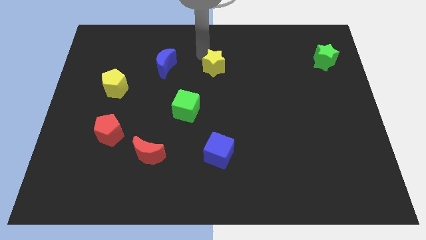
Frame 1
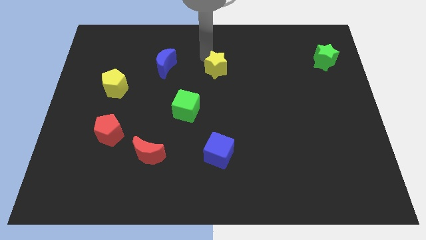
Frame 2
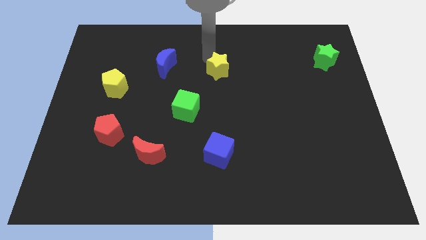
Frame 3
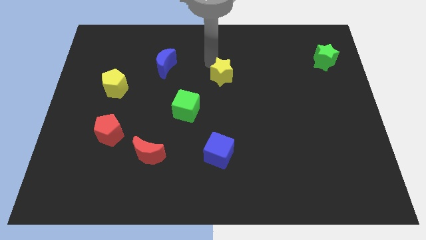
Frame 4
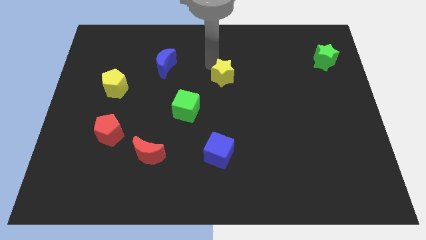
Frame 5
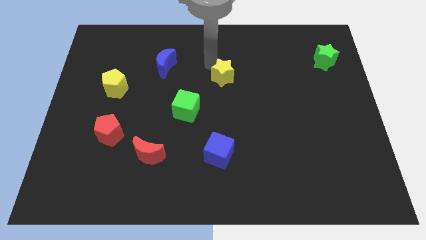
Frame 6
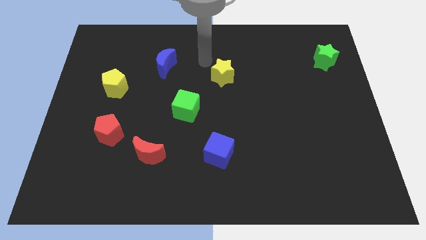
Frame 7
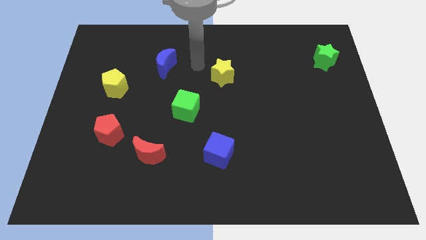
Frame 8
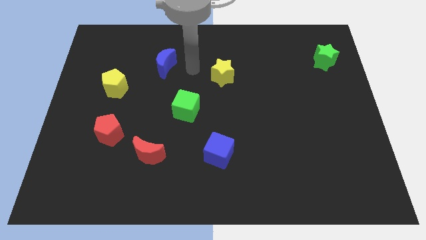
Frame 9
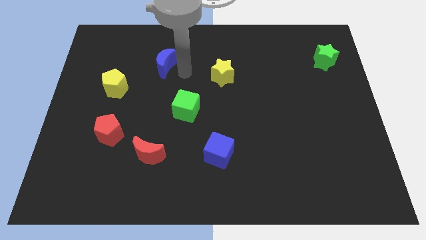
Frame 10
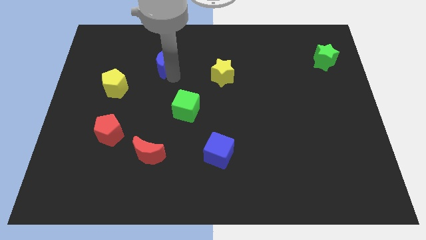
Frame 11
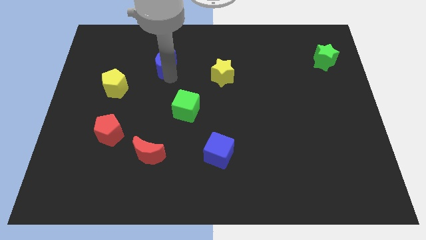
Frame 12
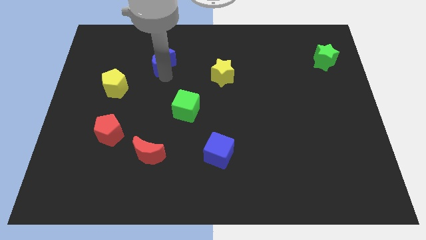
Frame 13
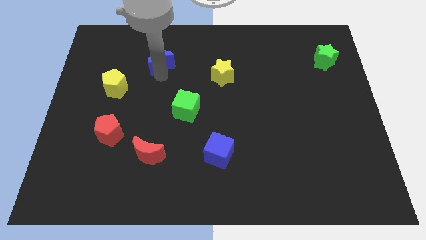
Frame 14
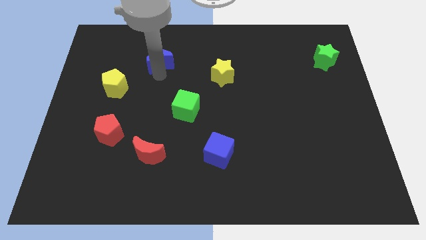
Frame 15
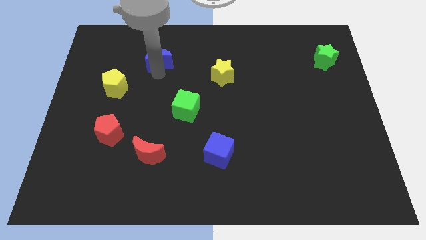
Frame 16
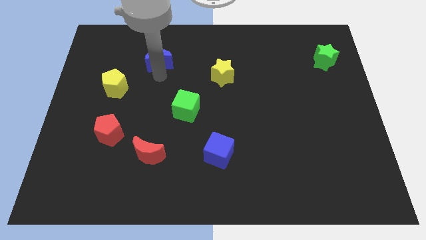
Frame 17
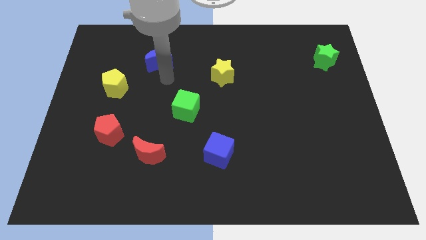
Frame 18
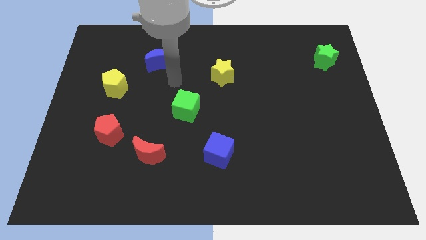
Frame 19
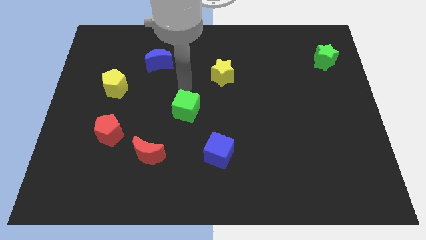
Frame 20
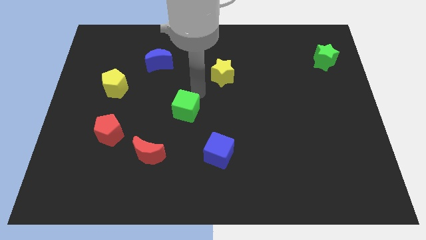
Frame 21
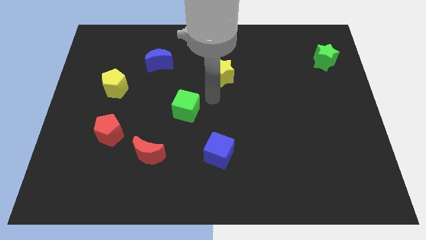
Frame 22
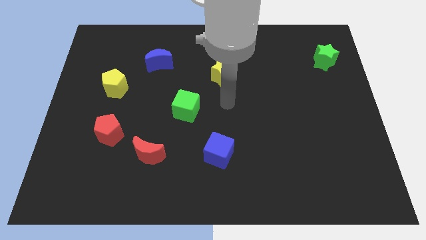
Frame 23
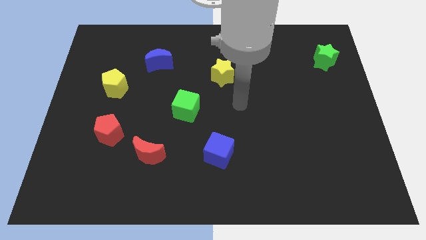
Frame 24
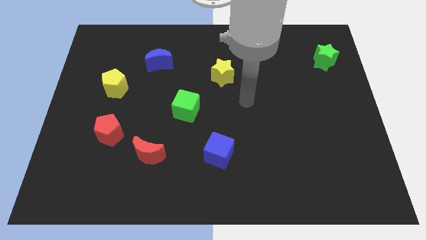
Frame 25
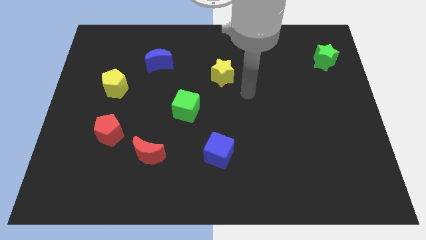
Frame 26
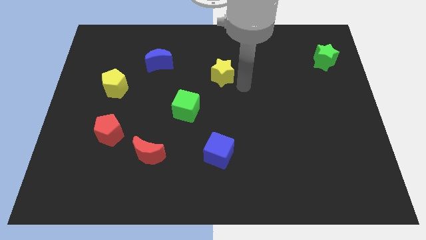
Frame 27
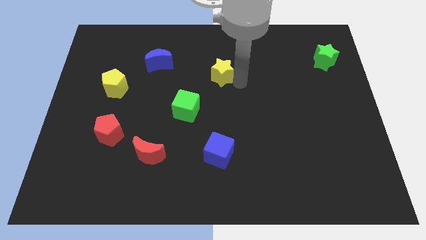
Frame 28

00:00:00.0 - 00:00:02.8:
slightly turn the blue crescent to the left and move away from it

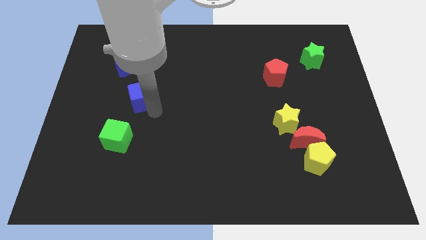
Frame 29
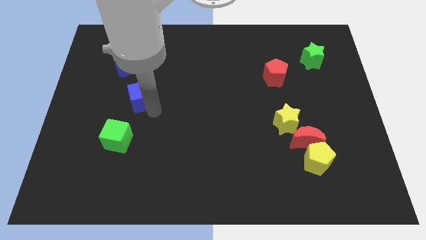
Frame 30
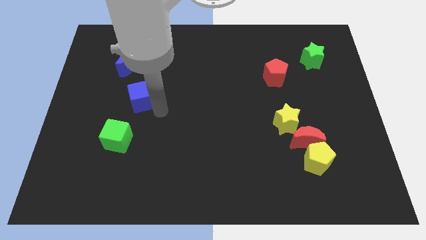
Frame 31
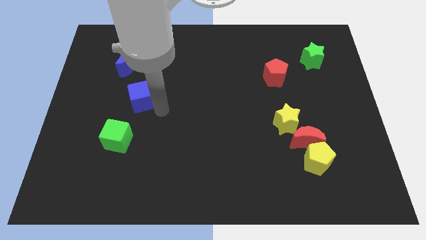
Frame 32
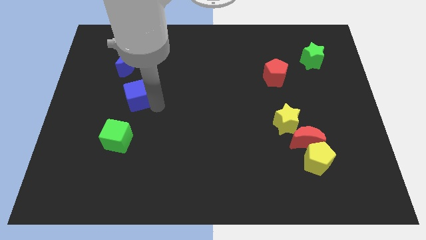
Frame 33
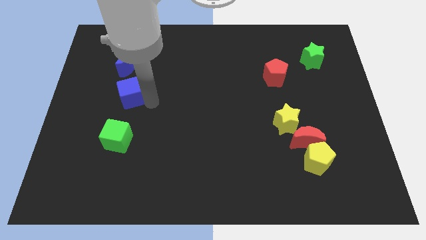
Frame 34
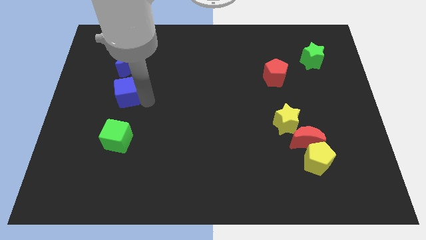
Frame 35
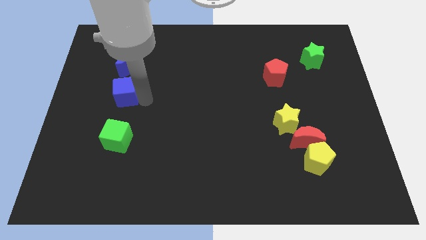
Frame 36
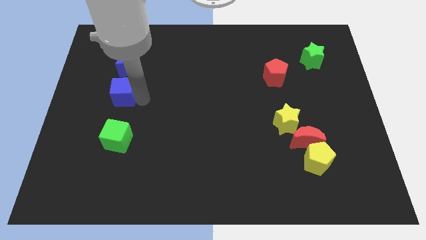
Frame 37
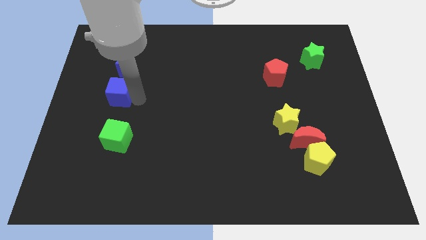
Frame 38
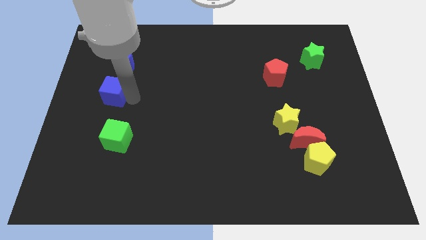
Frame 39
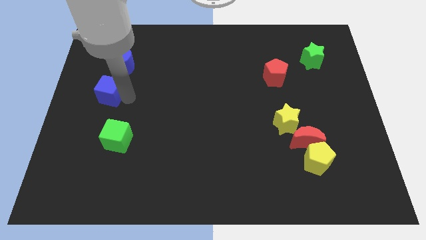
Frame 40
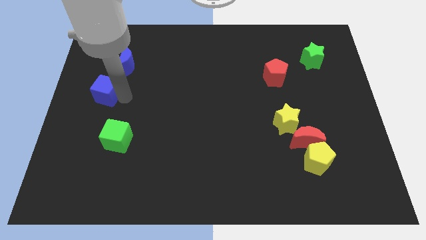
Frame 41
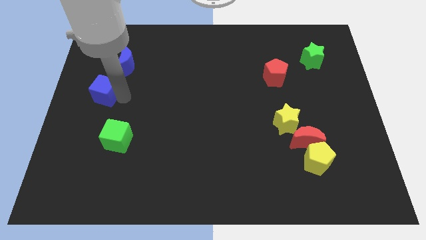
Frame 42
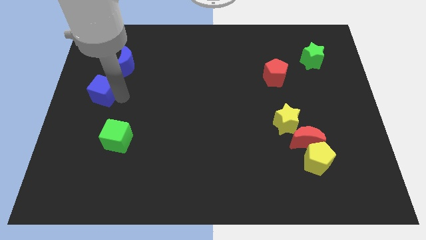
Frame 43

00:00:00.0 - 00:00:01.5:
push blue cube down to the blue crescent

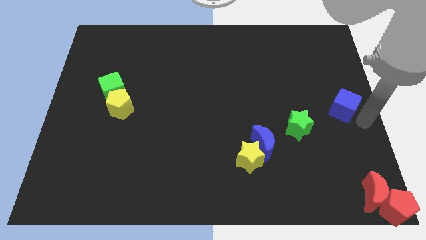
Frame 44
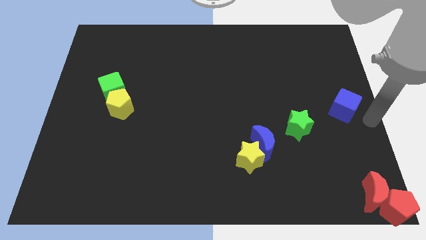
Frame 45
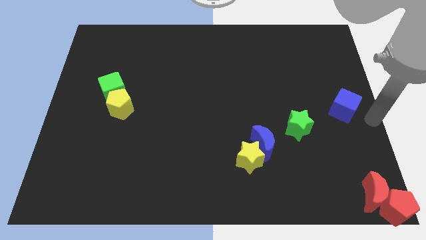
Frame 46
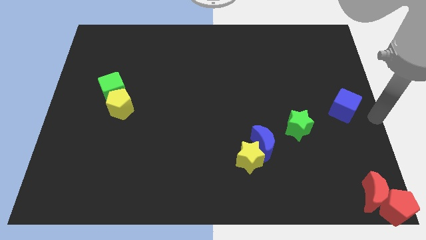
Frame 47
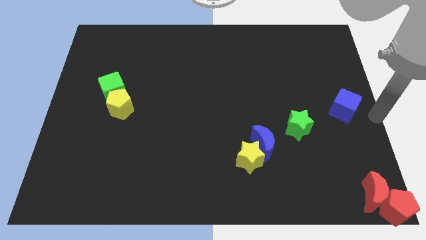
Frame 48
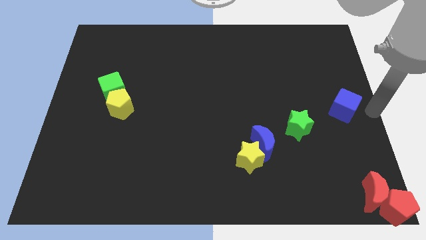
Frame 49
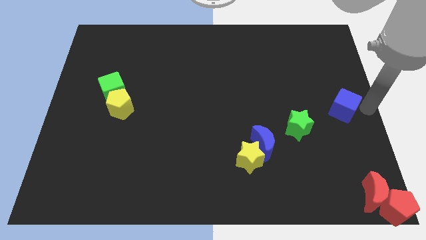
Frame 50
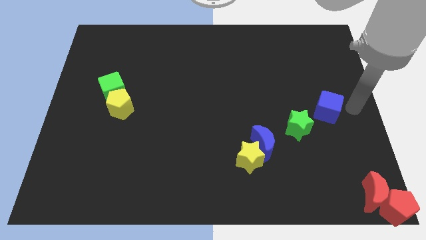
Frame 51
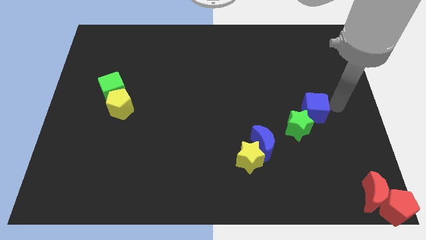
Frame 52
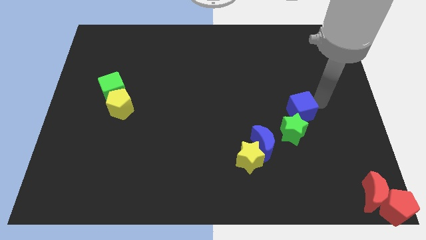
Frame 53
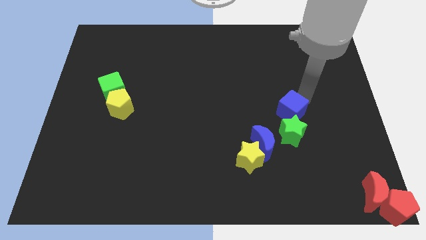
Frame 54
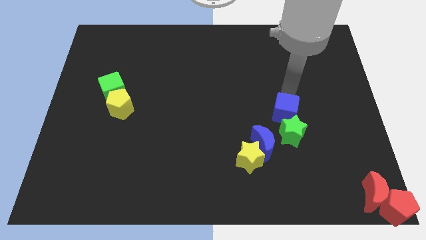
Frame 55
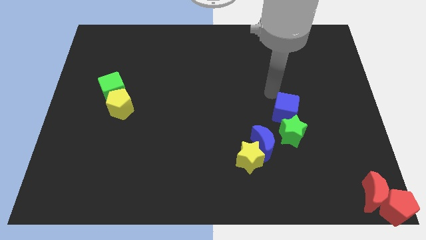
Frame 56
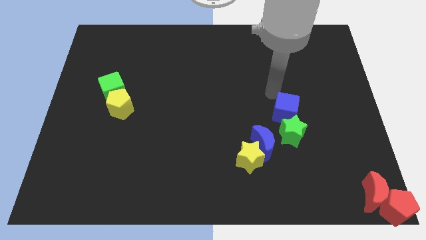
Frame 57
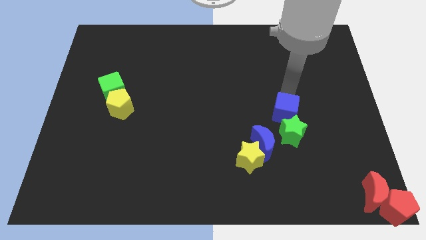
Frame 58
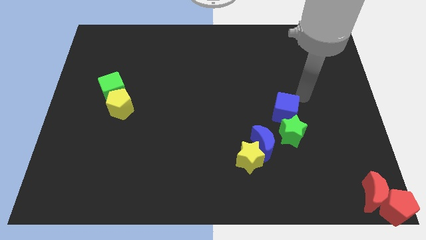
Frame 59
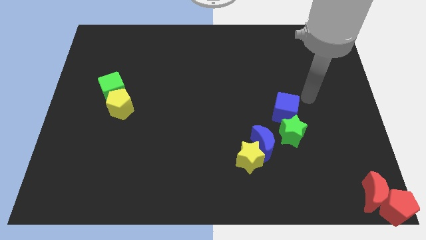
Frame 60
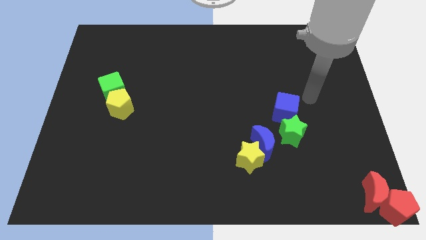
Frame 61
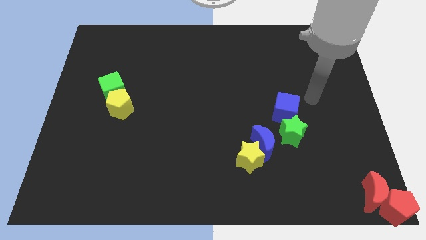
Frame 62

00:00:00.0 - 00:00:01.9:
push the blue cube into the top of green star

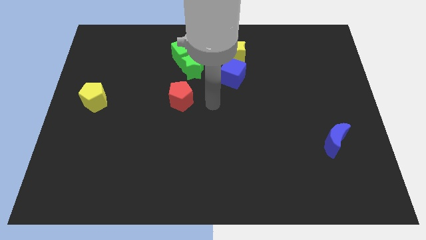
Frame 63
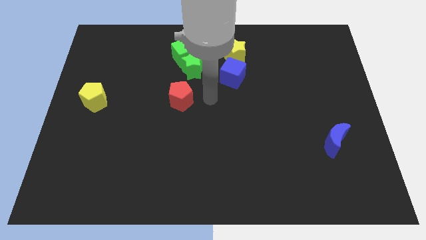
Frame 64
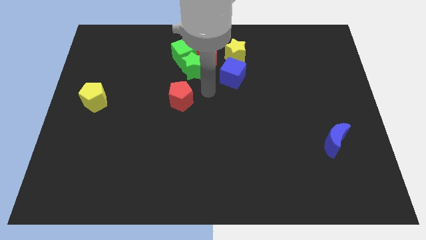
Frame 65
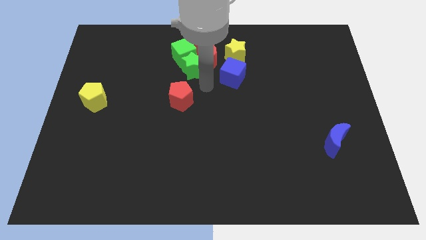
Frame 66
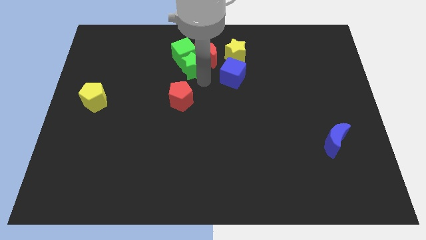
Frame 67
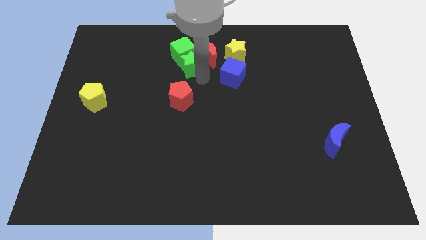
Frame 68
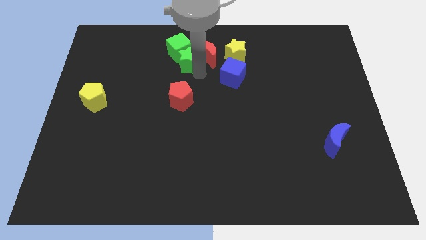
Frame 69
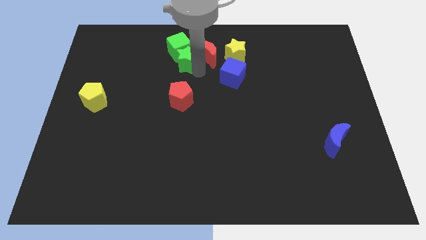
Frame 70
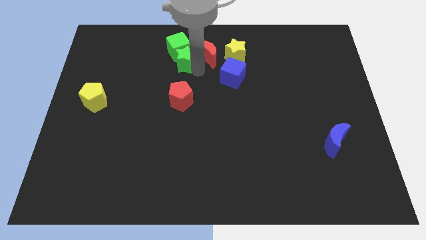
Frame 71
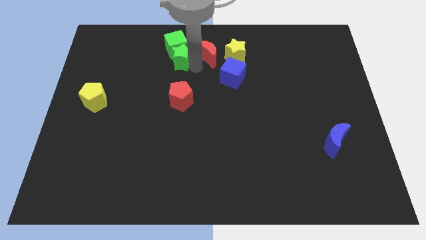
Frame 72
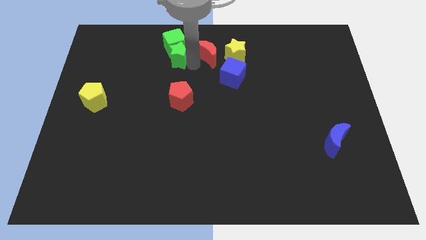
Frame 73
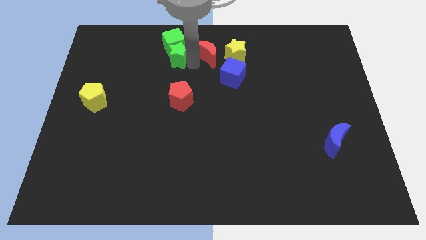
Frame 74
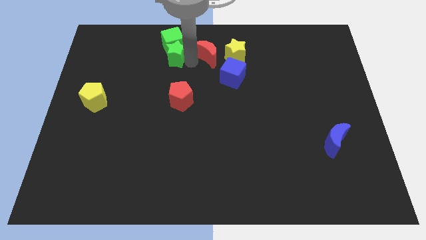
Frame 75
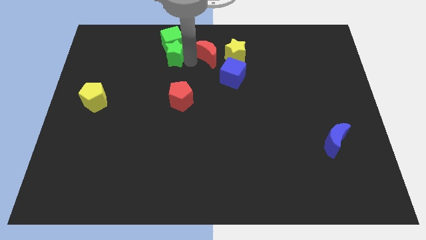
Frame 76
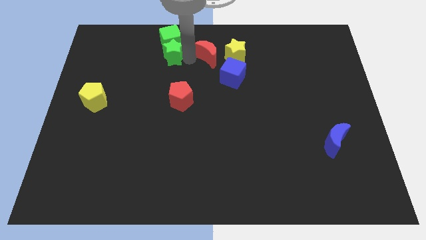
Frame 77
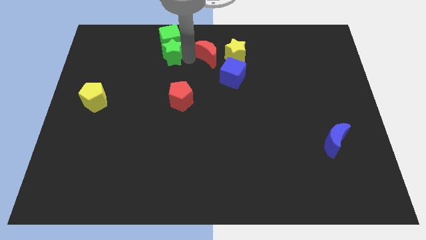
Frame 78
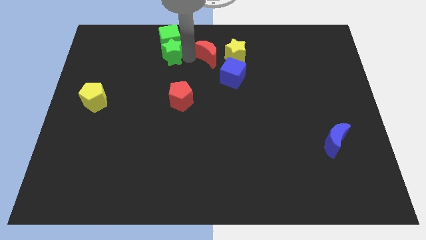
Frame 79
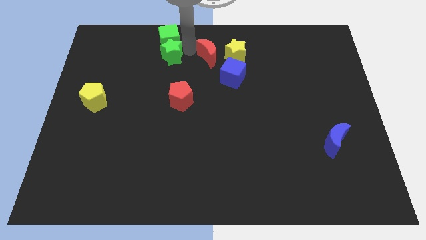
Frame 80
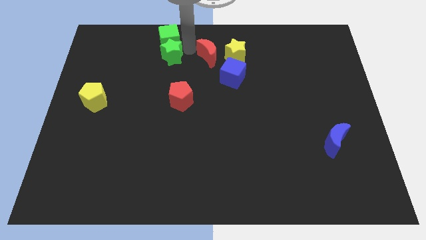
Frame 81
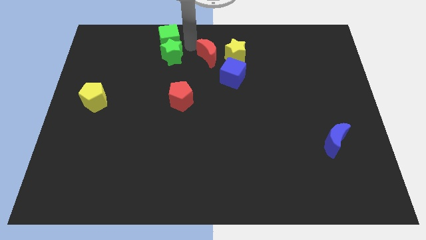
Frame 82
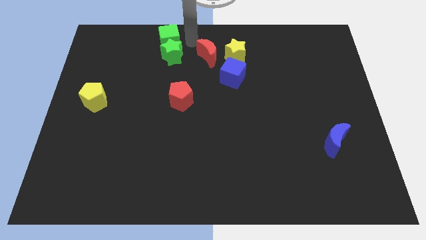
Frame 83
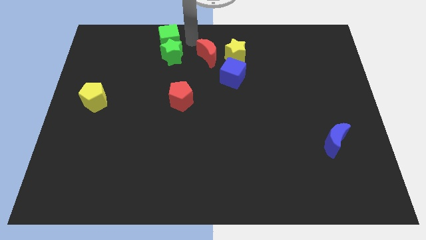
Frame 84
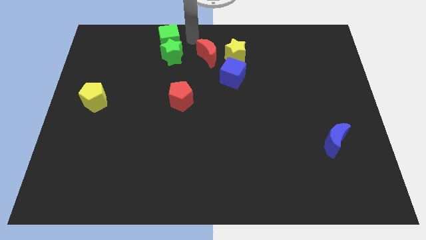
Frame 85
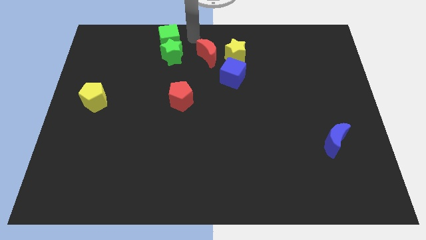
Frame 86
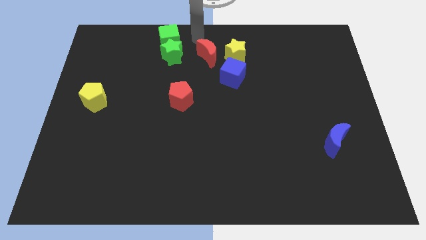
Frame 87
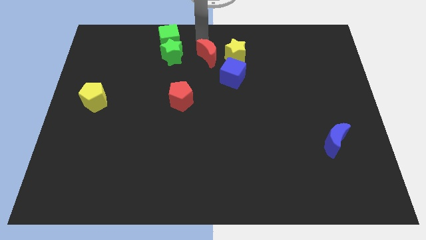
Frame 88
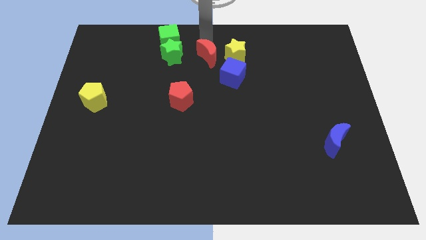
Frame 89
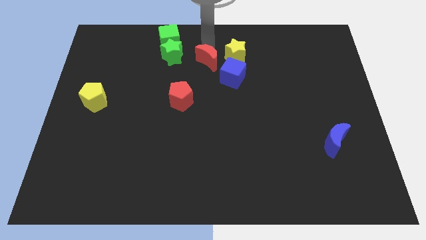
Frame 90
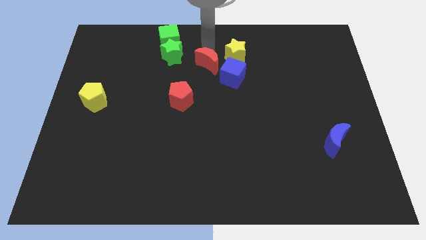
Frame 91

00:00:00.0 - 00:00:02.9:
slide green cube and green star at top of the board
